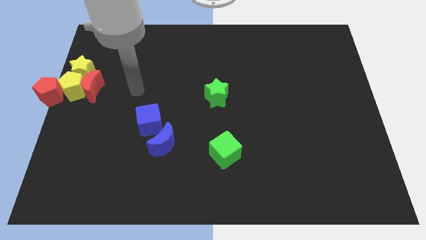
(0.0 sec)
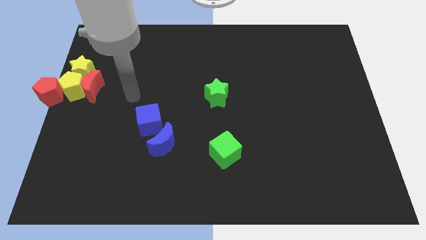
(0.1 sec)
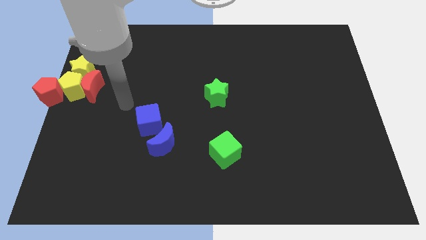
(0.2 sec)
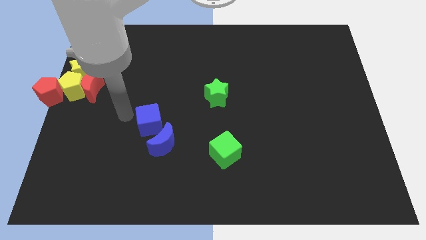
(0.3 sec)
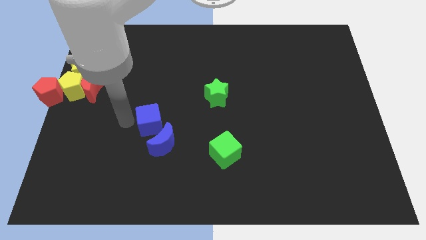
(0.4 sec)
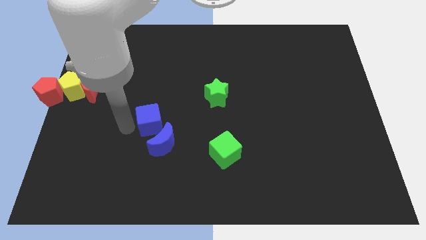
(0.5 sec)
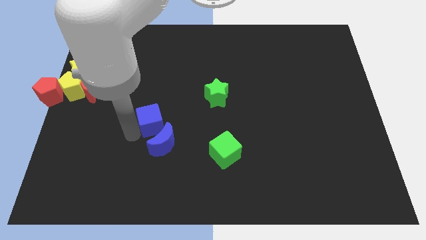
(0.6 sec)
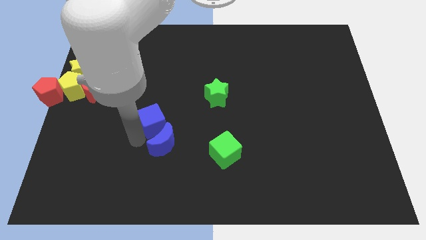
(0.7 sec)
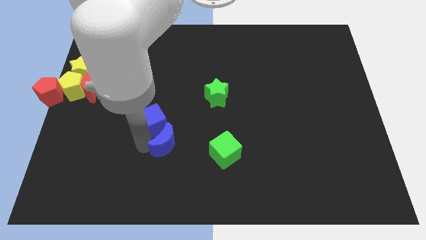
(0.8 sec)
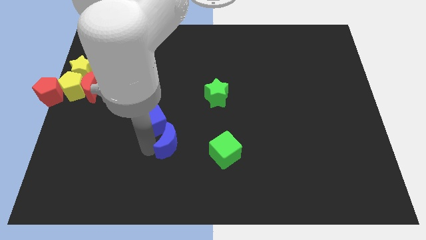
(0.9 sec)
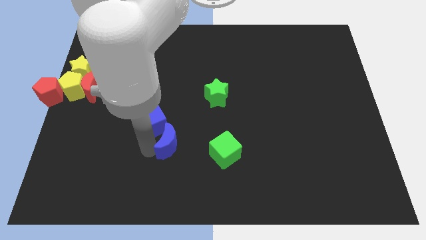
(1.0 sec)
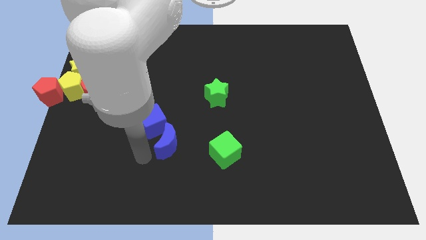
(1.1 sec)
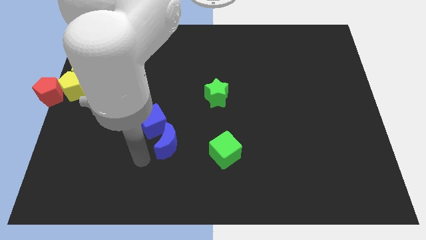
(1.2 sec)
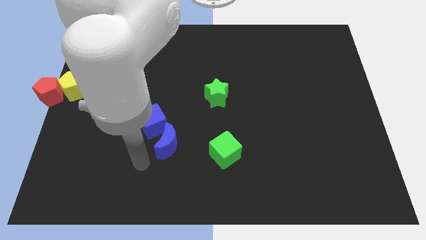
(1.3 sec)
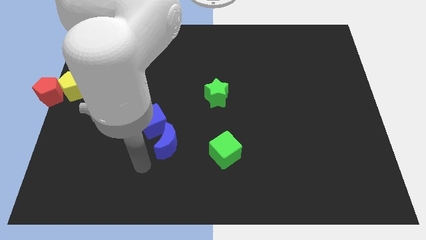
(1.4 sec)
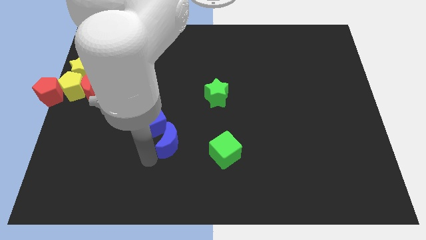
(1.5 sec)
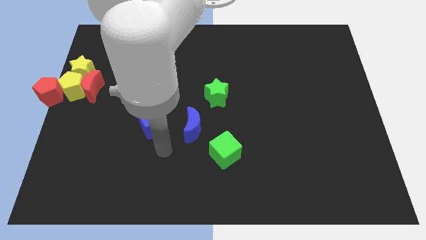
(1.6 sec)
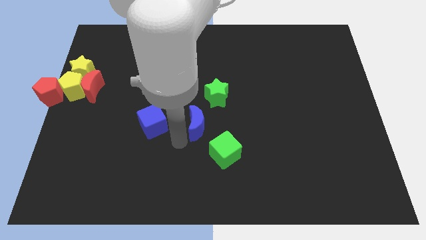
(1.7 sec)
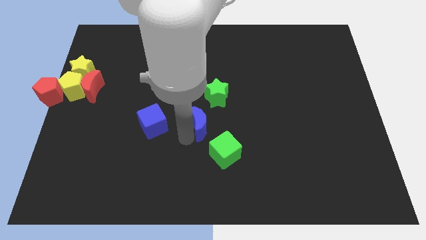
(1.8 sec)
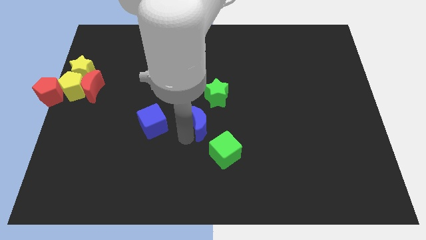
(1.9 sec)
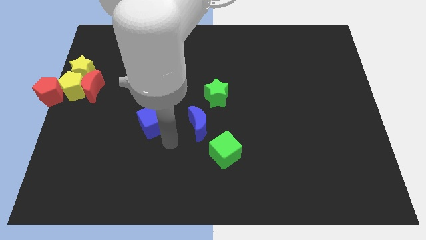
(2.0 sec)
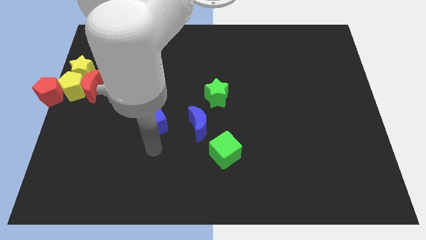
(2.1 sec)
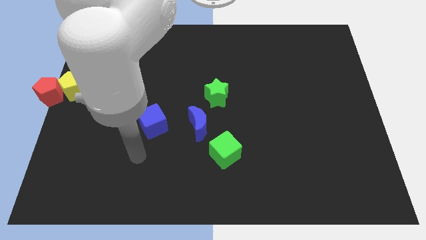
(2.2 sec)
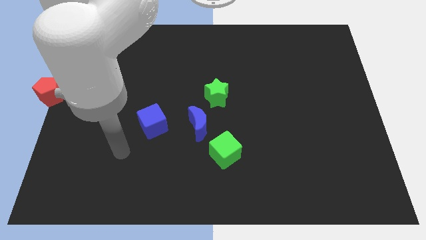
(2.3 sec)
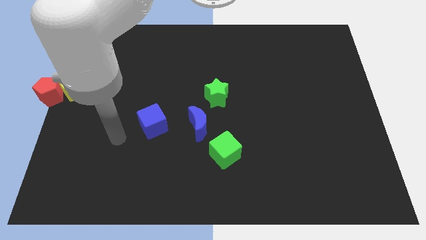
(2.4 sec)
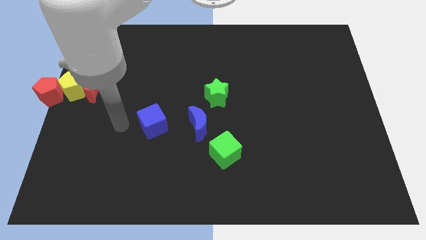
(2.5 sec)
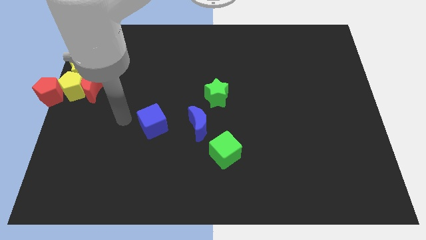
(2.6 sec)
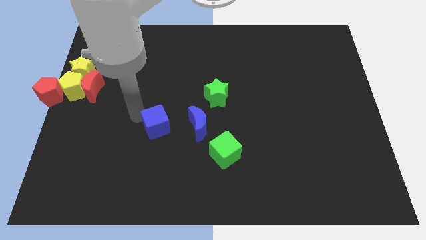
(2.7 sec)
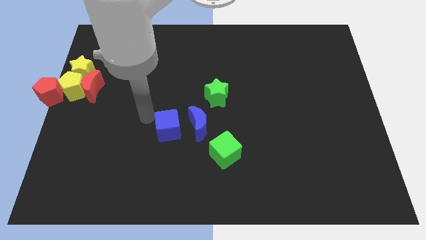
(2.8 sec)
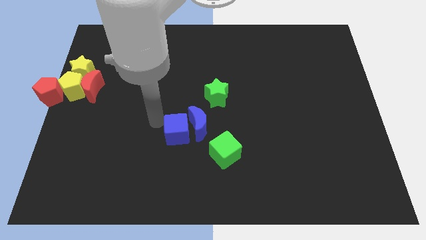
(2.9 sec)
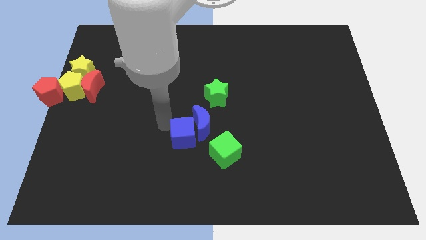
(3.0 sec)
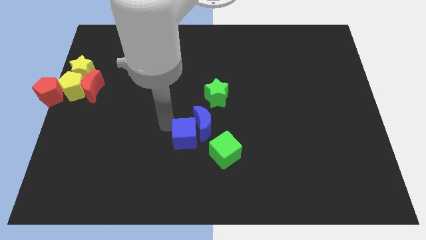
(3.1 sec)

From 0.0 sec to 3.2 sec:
slide blue blocks towards green cube

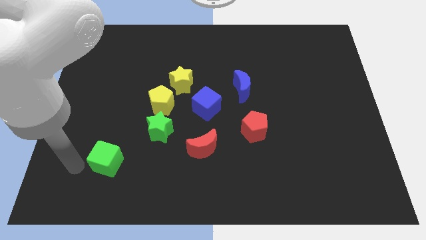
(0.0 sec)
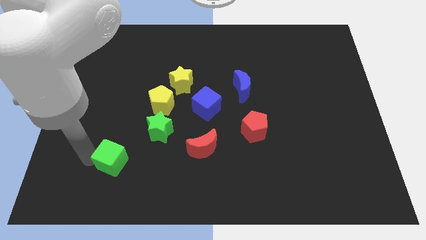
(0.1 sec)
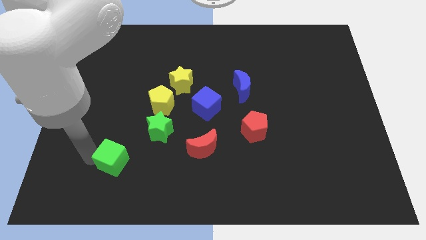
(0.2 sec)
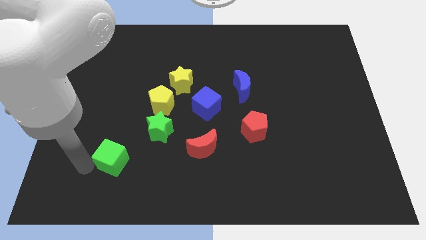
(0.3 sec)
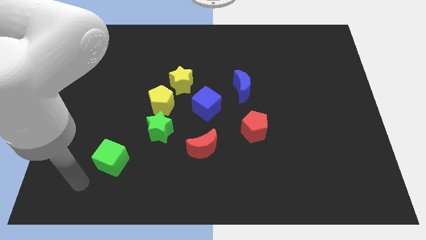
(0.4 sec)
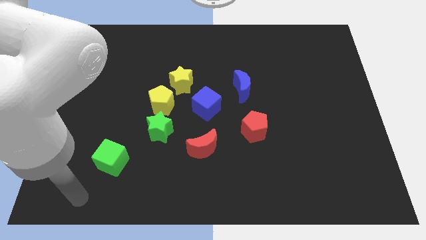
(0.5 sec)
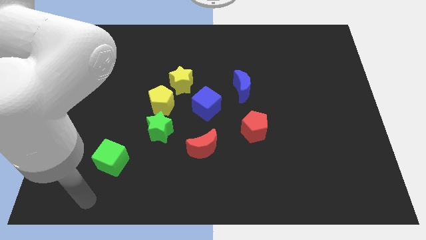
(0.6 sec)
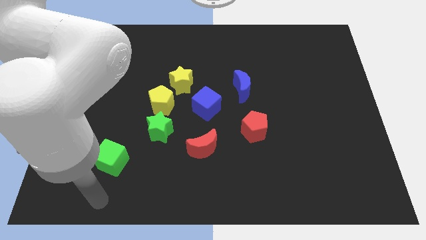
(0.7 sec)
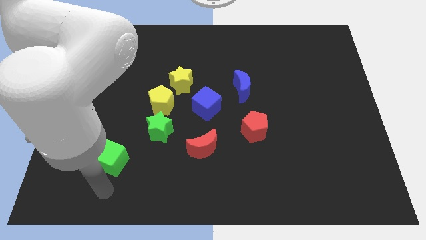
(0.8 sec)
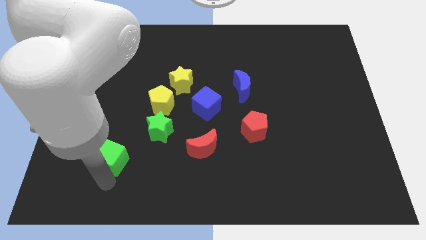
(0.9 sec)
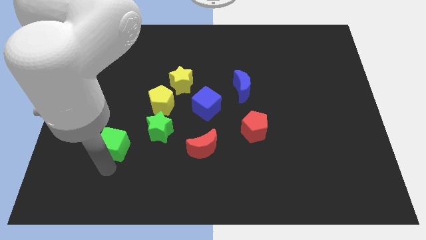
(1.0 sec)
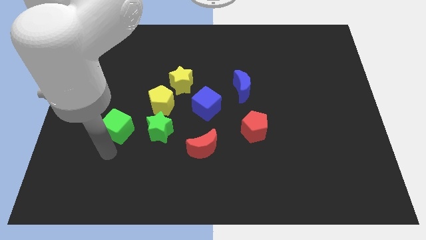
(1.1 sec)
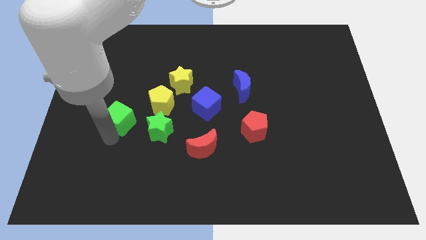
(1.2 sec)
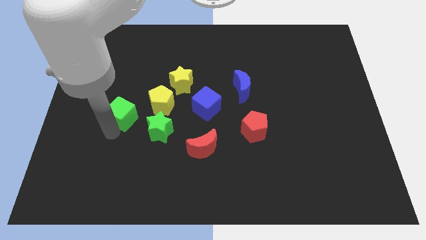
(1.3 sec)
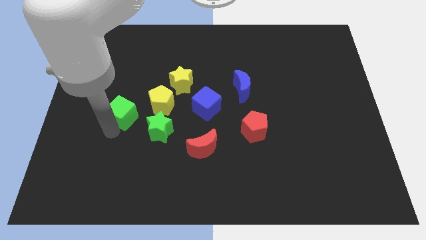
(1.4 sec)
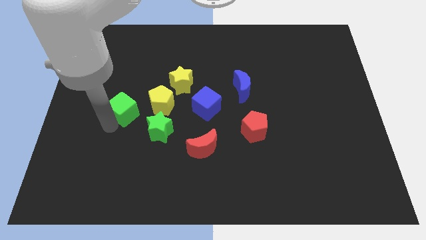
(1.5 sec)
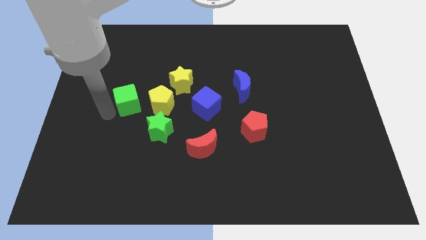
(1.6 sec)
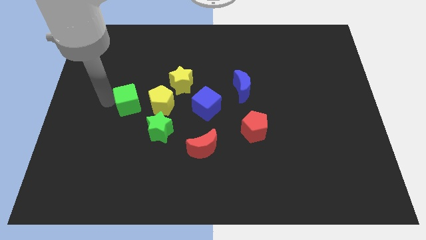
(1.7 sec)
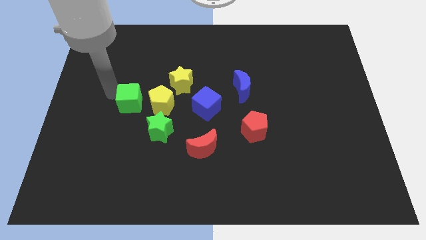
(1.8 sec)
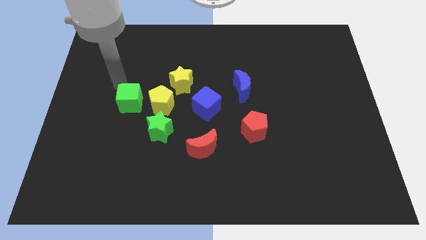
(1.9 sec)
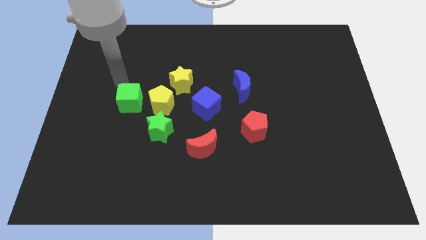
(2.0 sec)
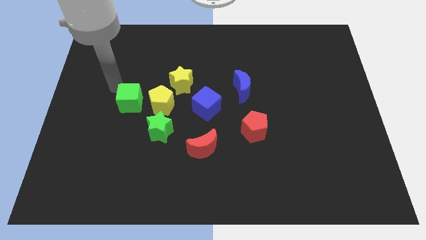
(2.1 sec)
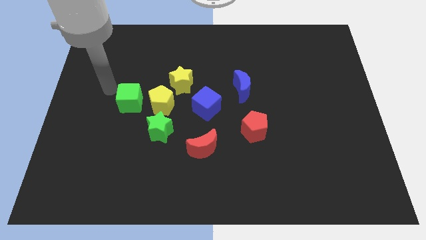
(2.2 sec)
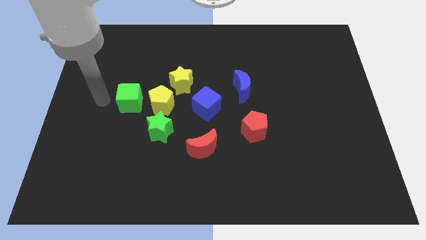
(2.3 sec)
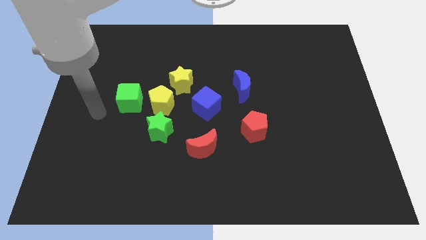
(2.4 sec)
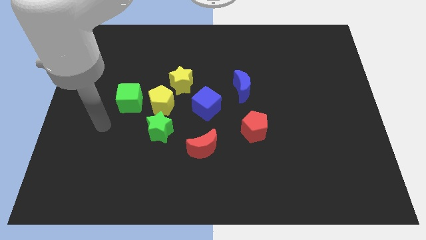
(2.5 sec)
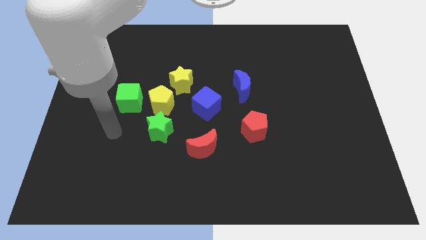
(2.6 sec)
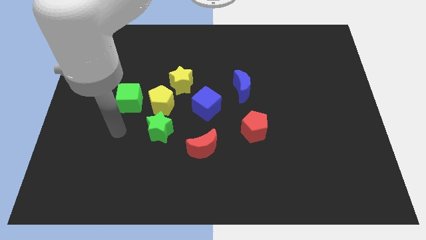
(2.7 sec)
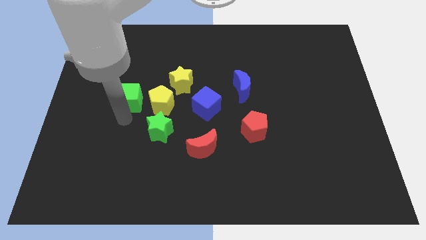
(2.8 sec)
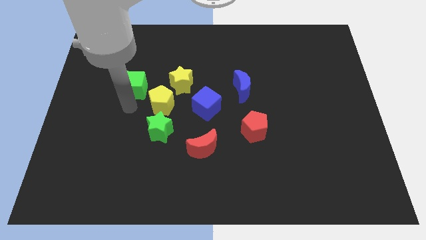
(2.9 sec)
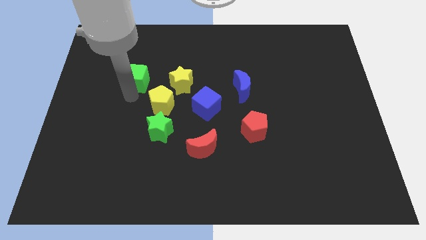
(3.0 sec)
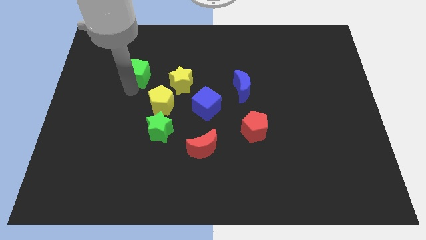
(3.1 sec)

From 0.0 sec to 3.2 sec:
push green cube to the left side of the yellow star

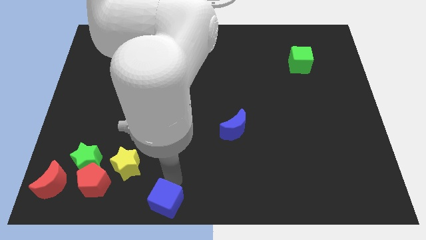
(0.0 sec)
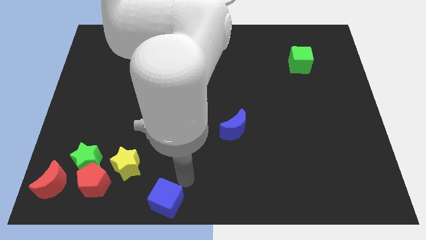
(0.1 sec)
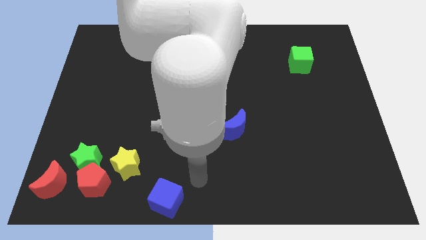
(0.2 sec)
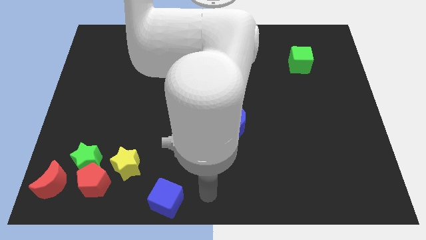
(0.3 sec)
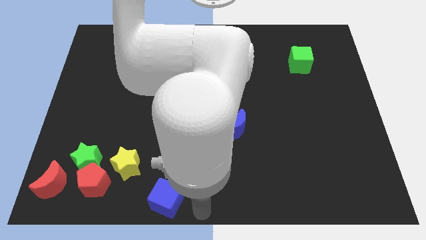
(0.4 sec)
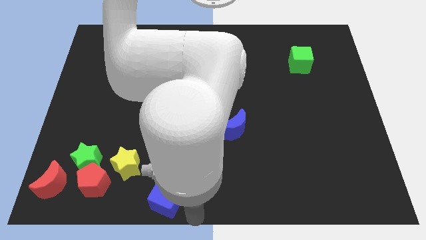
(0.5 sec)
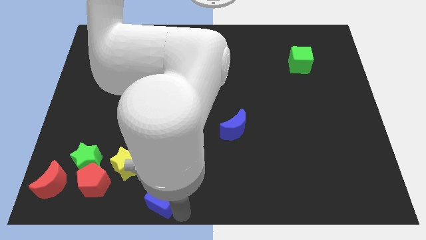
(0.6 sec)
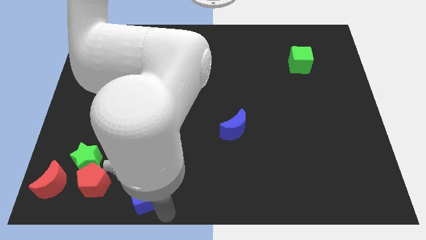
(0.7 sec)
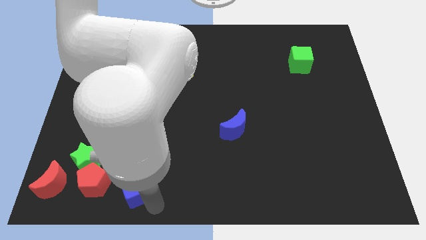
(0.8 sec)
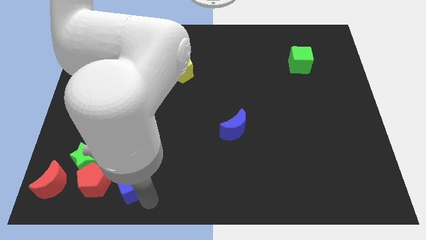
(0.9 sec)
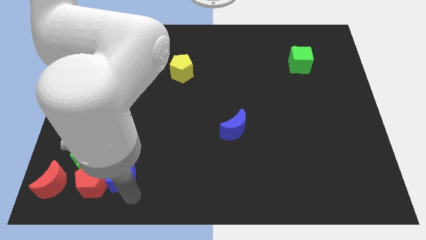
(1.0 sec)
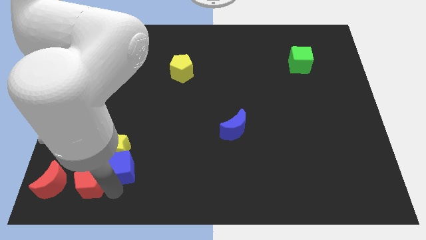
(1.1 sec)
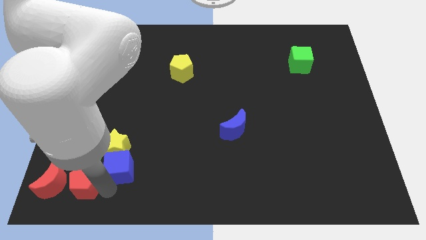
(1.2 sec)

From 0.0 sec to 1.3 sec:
push blue cube into yellow star

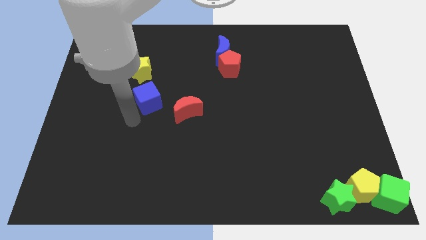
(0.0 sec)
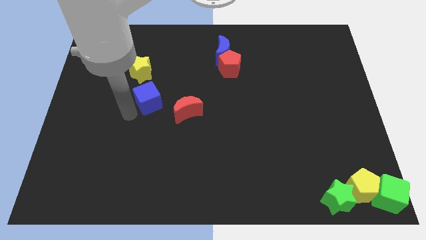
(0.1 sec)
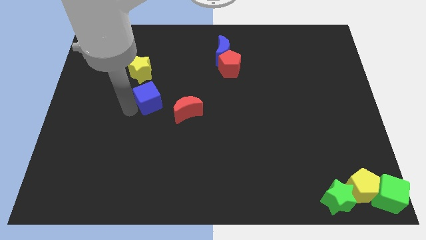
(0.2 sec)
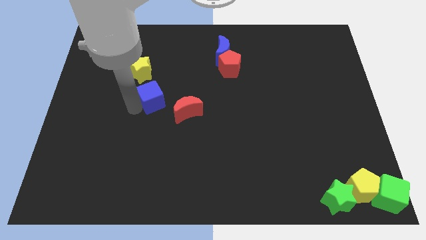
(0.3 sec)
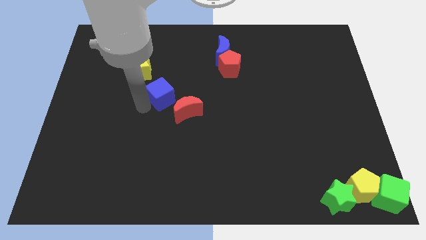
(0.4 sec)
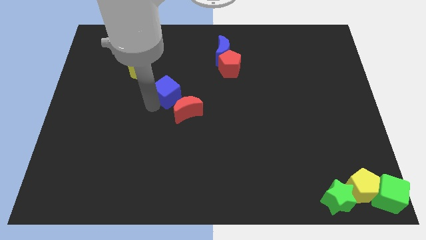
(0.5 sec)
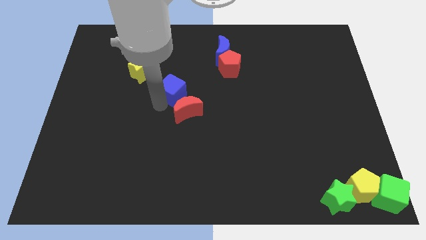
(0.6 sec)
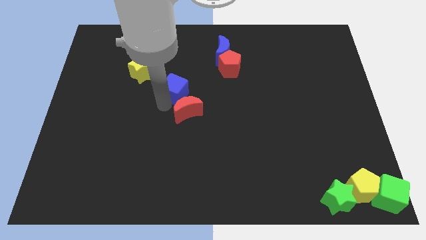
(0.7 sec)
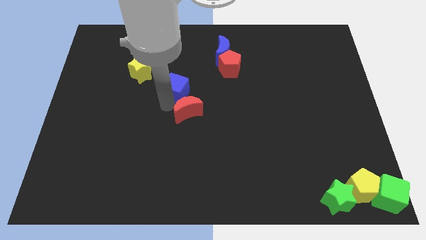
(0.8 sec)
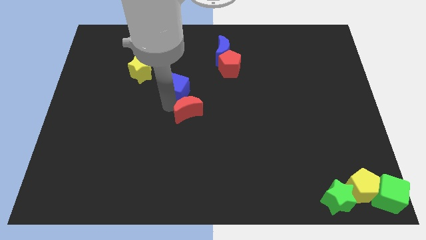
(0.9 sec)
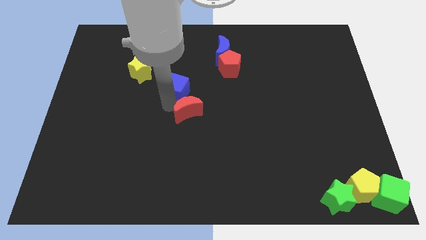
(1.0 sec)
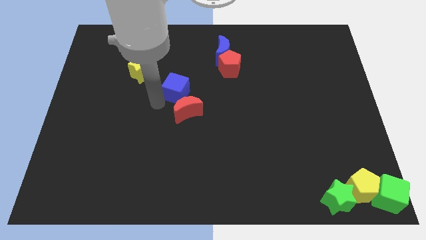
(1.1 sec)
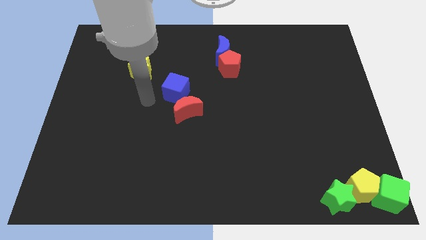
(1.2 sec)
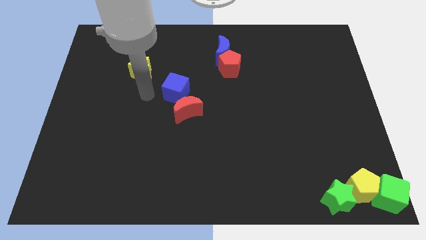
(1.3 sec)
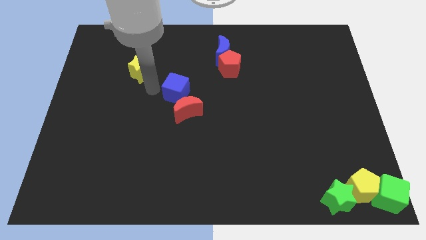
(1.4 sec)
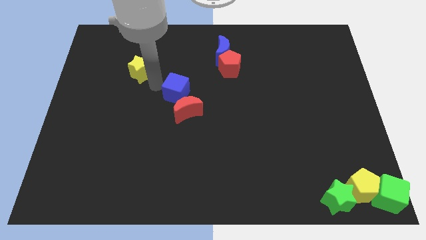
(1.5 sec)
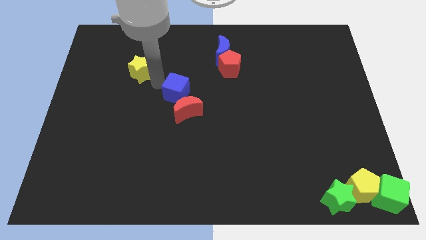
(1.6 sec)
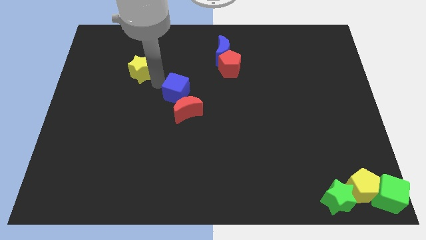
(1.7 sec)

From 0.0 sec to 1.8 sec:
place the blue cube above the red moon
